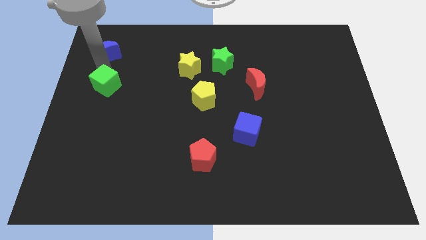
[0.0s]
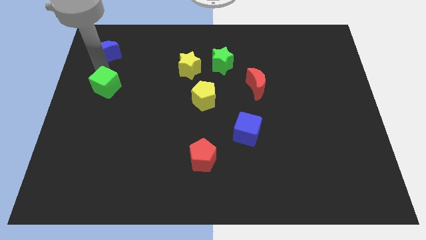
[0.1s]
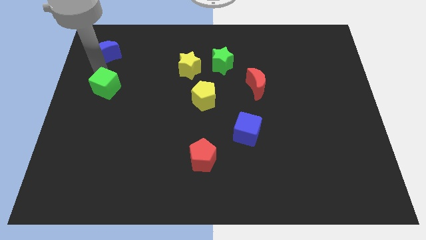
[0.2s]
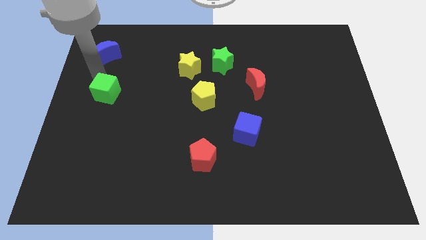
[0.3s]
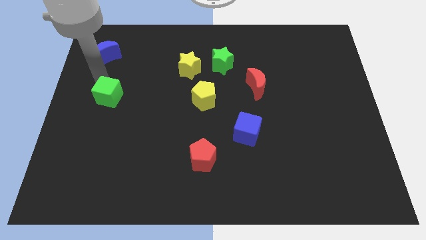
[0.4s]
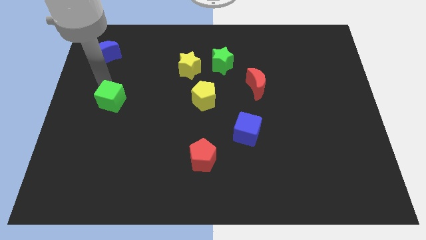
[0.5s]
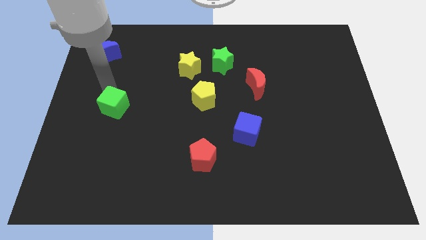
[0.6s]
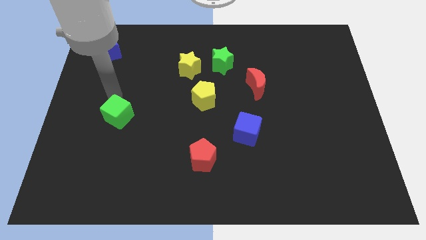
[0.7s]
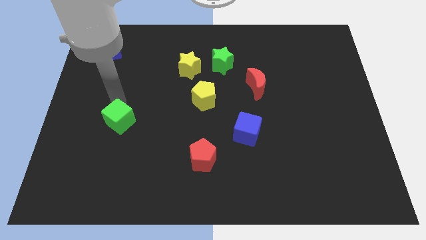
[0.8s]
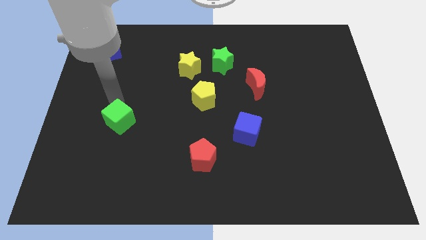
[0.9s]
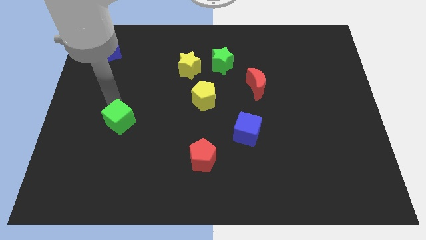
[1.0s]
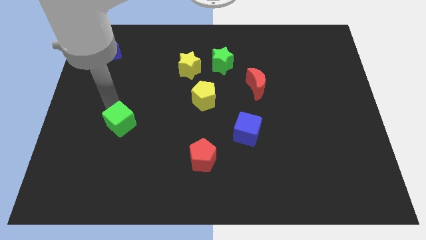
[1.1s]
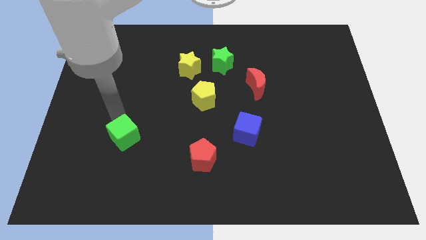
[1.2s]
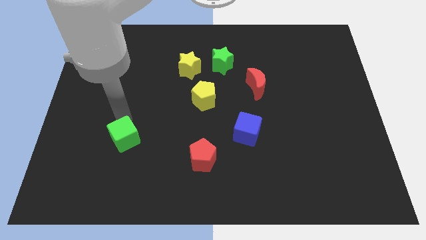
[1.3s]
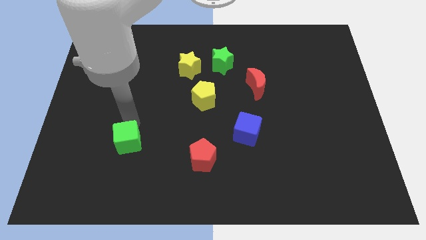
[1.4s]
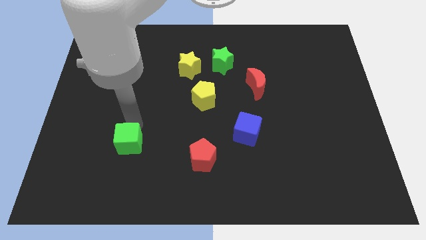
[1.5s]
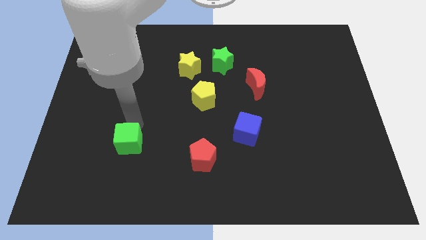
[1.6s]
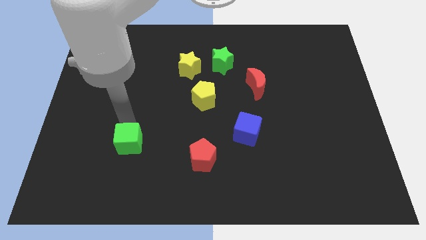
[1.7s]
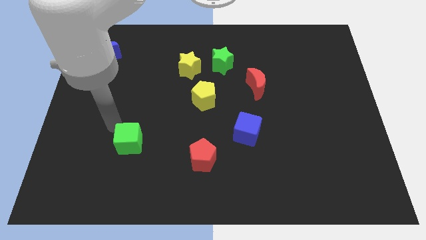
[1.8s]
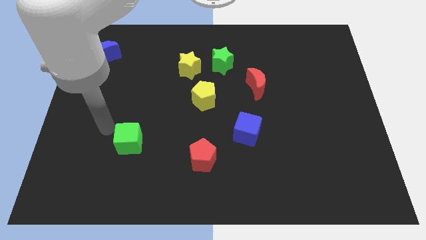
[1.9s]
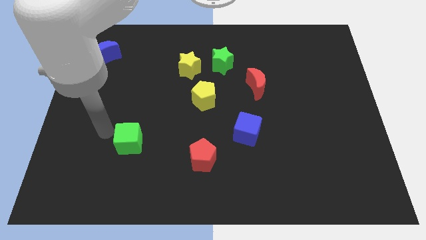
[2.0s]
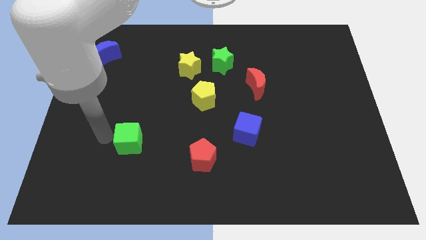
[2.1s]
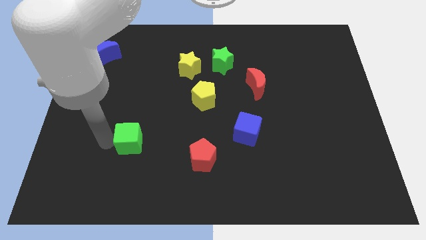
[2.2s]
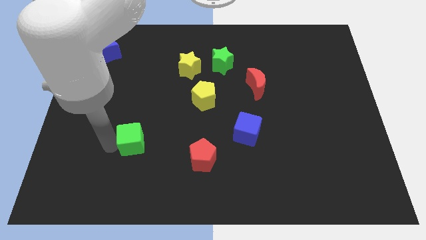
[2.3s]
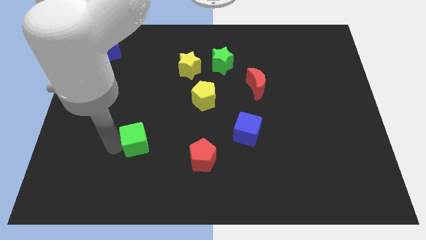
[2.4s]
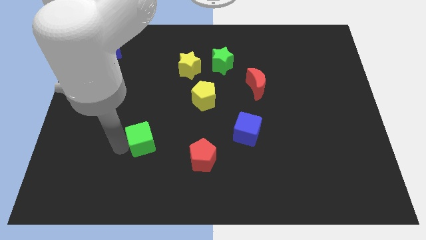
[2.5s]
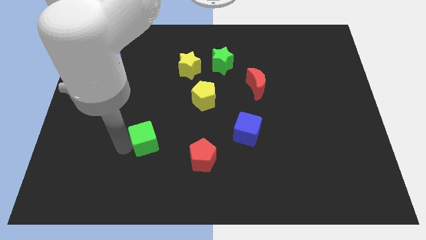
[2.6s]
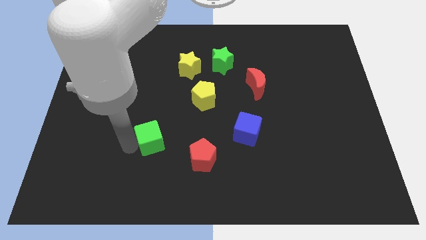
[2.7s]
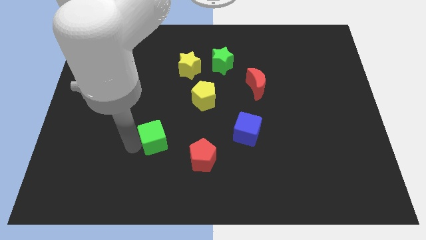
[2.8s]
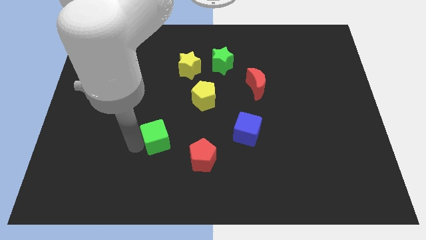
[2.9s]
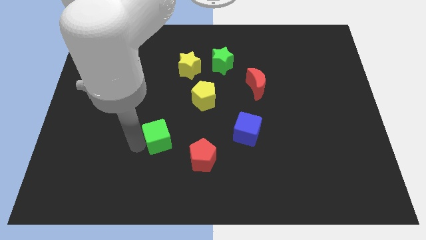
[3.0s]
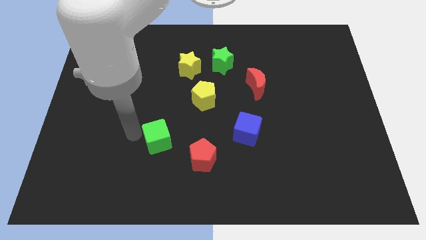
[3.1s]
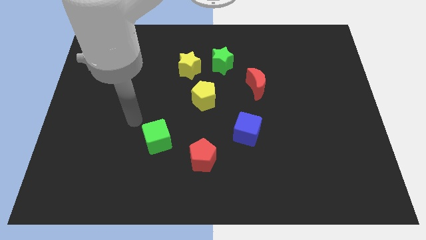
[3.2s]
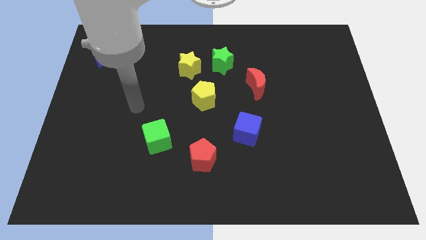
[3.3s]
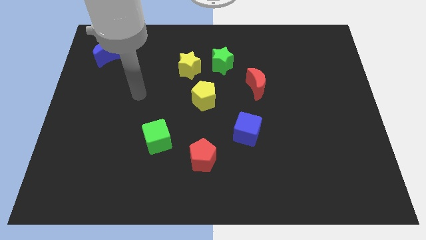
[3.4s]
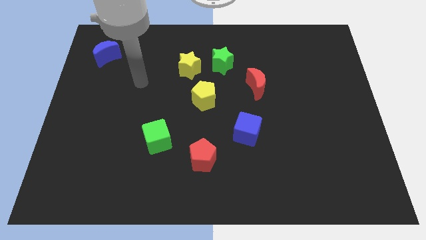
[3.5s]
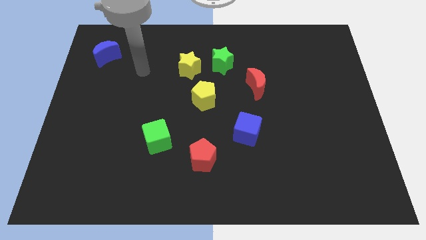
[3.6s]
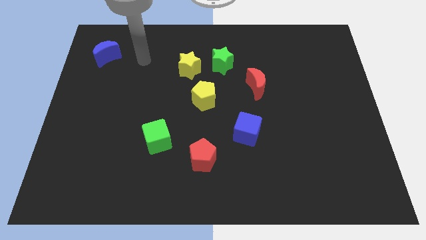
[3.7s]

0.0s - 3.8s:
push the green cube to the left of red pentagon

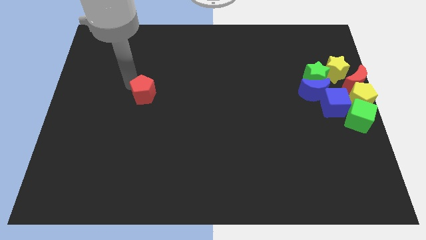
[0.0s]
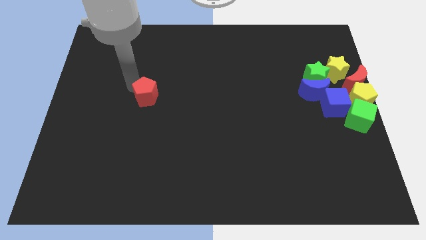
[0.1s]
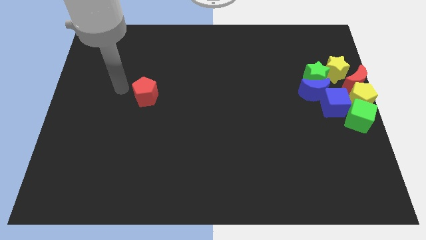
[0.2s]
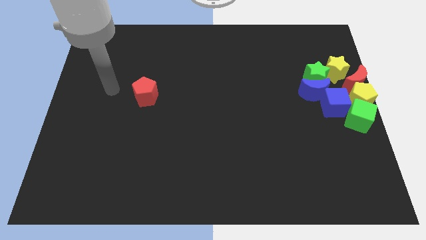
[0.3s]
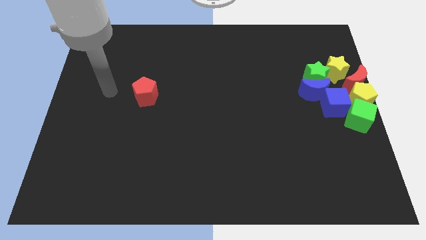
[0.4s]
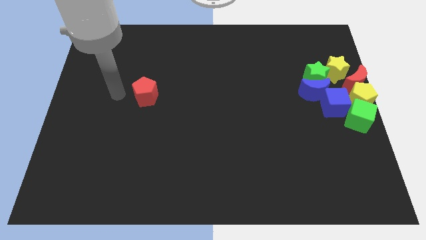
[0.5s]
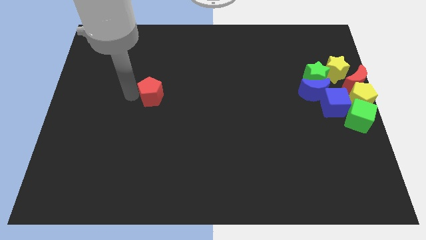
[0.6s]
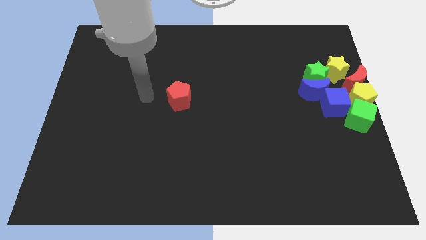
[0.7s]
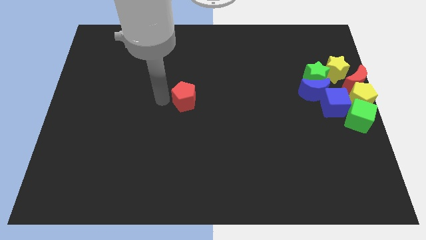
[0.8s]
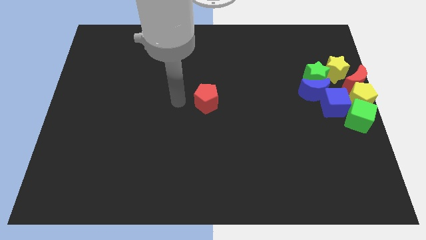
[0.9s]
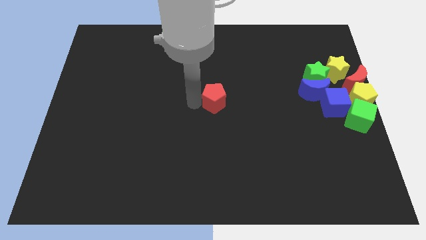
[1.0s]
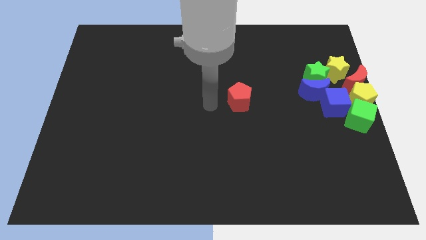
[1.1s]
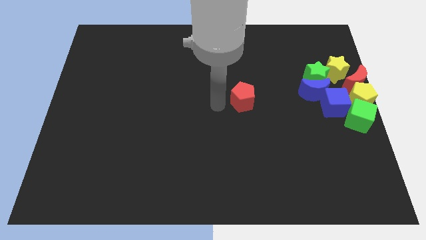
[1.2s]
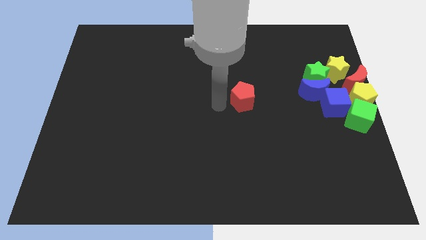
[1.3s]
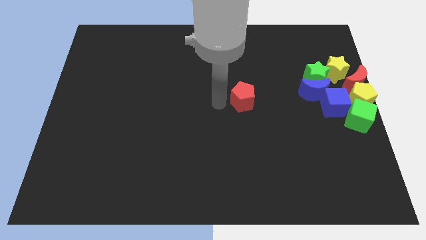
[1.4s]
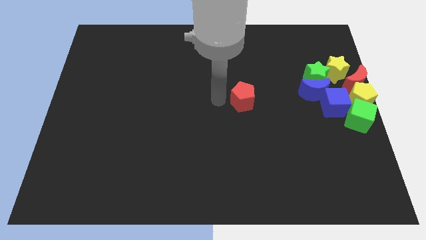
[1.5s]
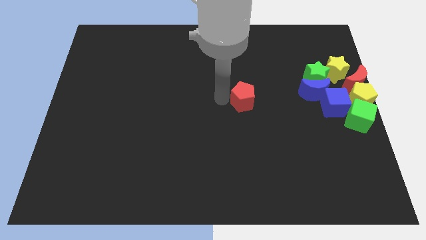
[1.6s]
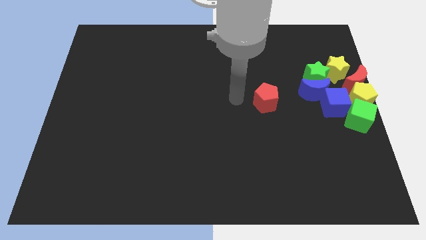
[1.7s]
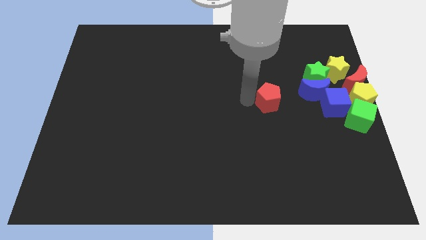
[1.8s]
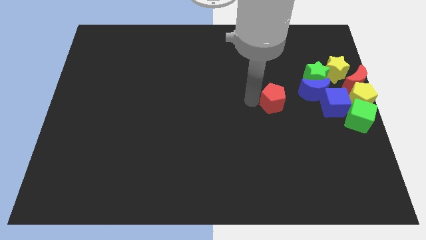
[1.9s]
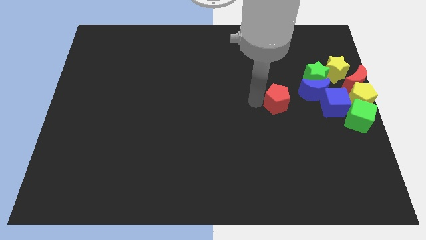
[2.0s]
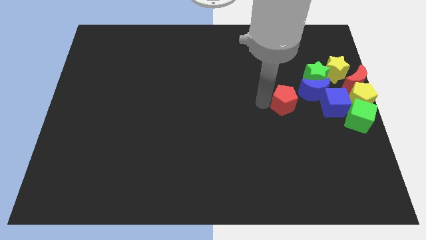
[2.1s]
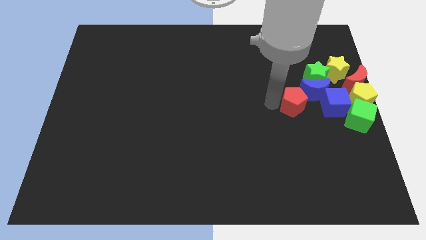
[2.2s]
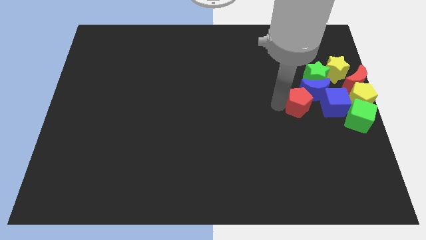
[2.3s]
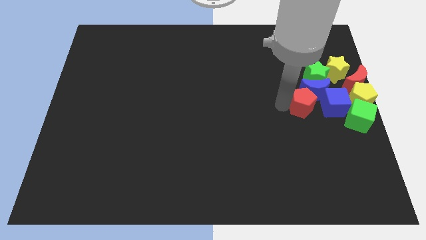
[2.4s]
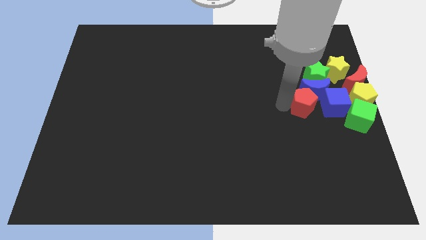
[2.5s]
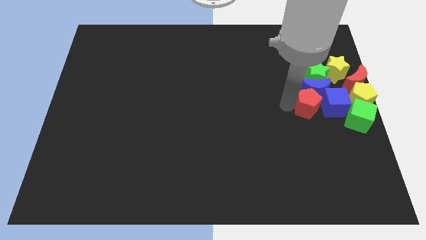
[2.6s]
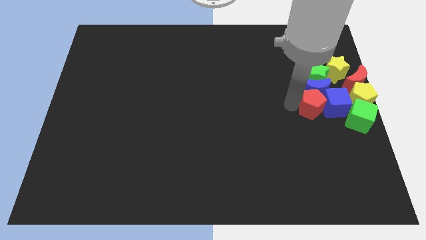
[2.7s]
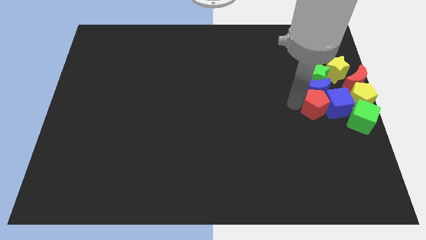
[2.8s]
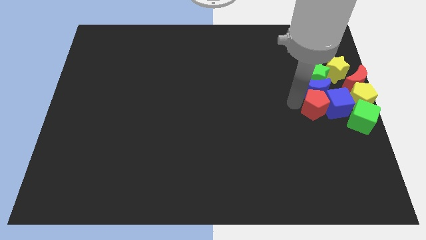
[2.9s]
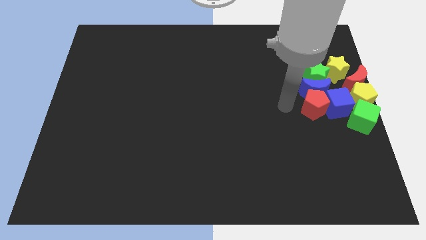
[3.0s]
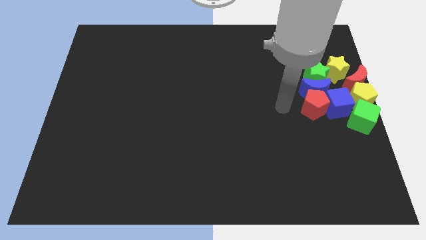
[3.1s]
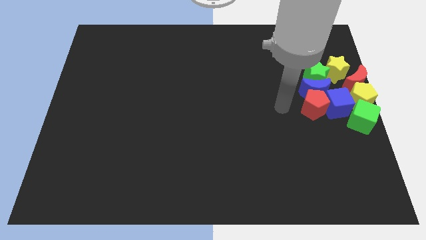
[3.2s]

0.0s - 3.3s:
place red pentagon to the bottom of blue moon

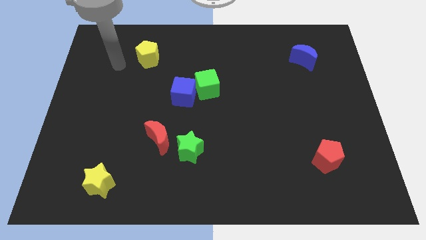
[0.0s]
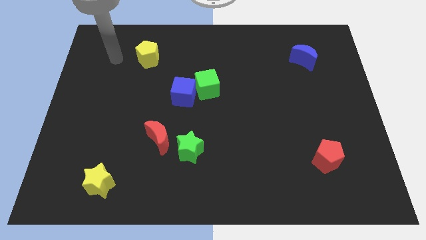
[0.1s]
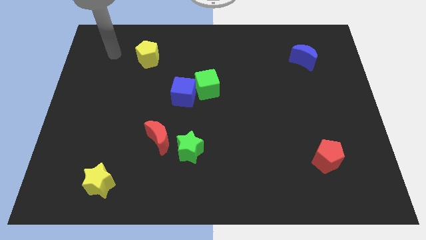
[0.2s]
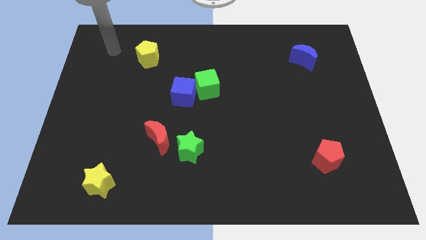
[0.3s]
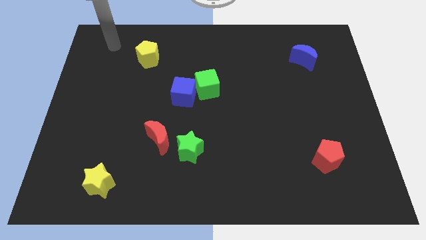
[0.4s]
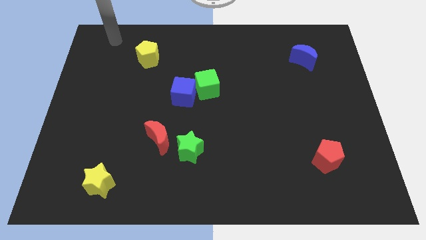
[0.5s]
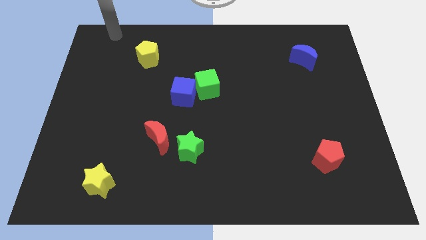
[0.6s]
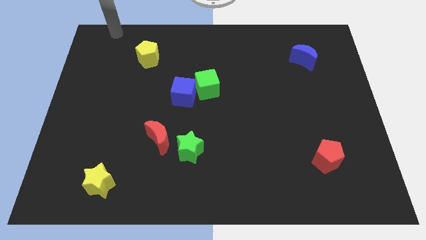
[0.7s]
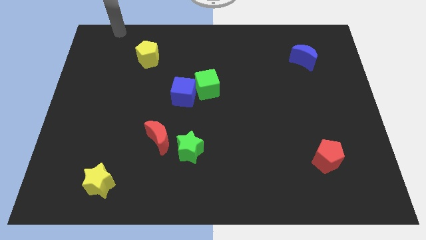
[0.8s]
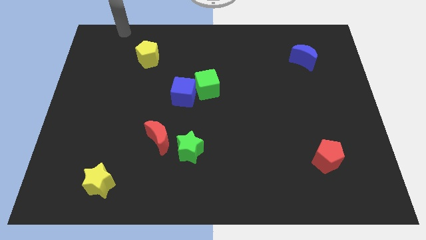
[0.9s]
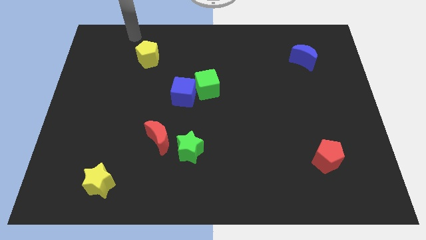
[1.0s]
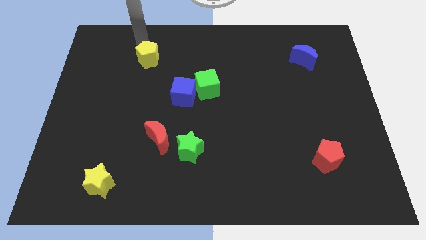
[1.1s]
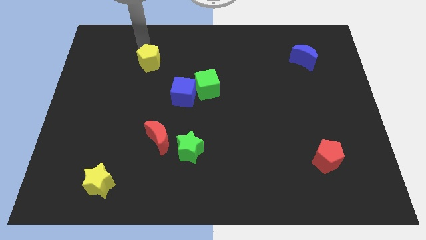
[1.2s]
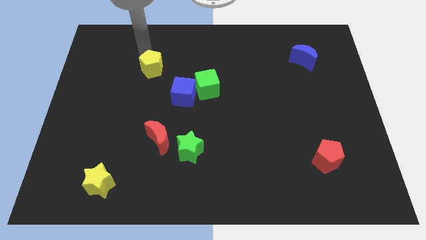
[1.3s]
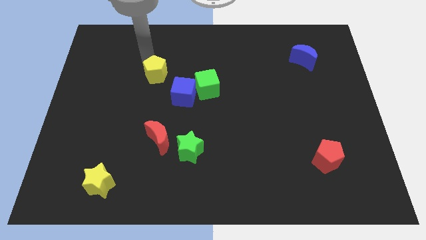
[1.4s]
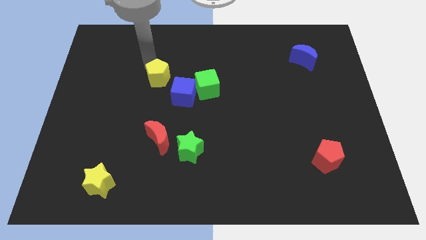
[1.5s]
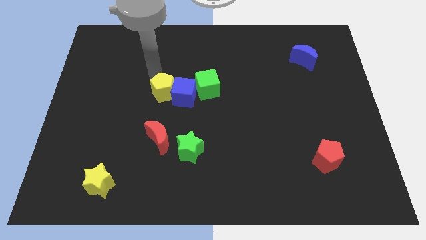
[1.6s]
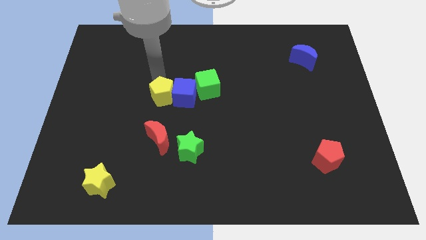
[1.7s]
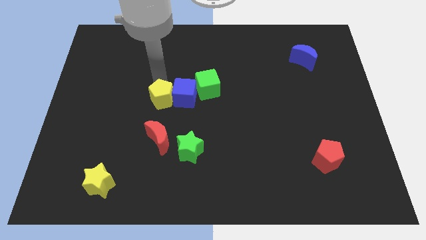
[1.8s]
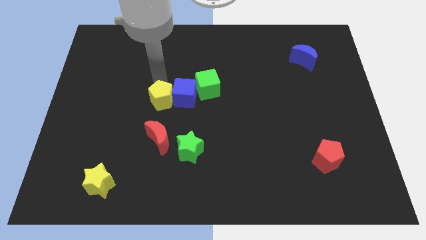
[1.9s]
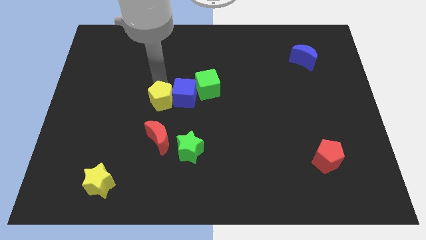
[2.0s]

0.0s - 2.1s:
push the yellow pentagon into the left side of the blue cube
